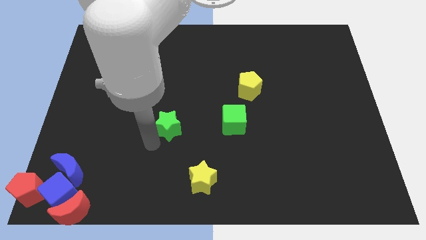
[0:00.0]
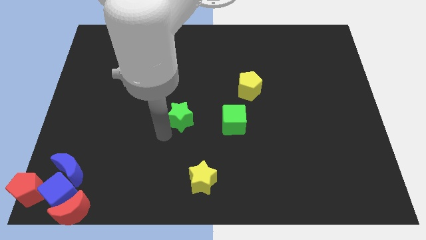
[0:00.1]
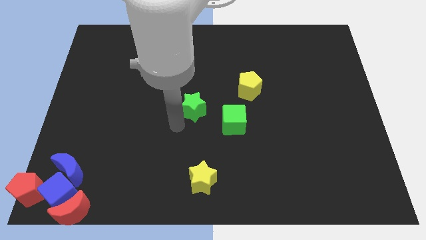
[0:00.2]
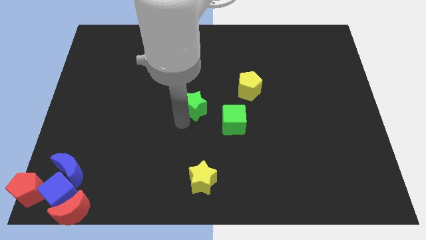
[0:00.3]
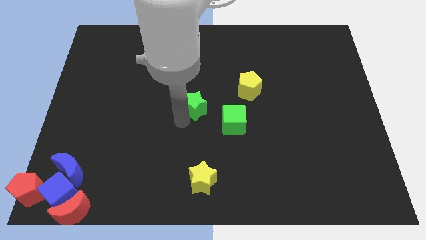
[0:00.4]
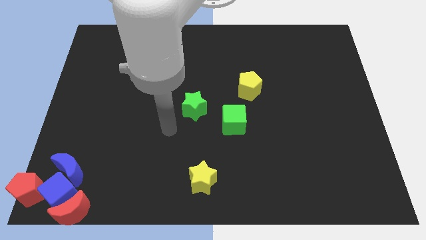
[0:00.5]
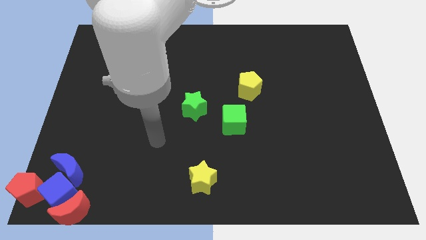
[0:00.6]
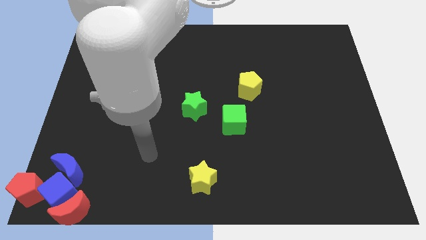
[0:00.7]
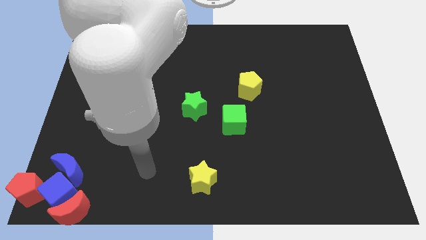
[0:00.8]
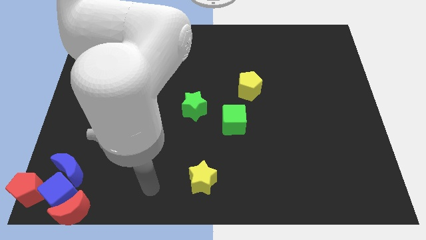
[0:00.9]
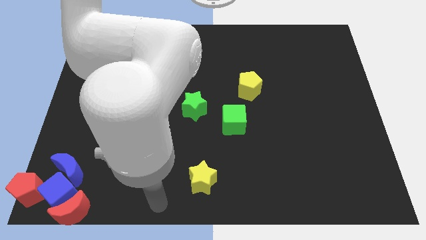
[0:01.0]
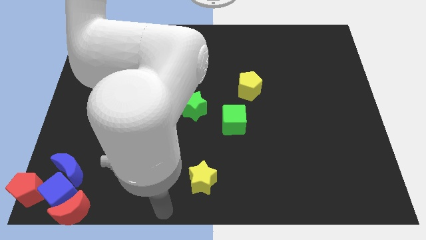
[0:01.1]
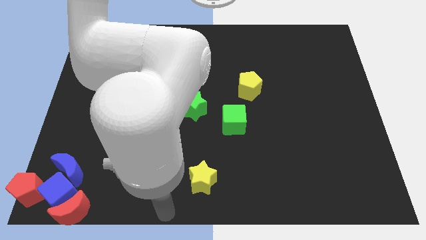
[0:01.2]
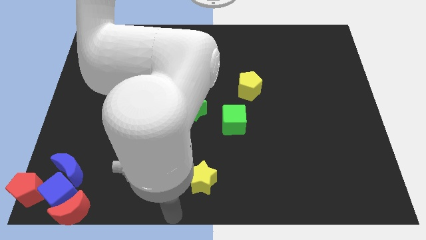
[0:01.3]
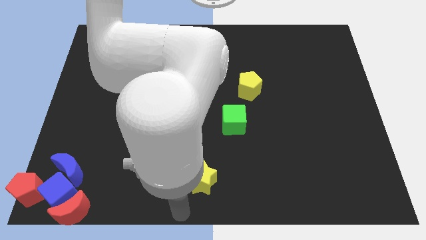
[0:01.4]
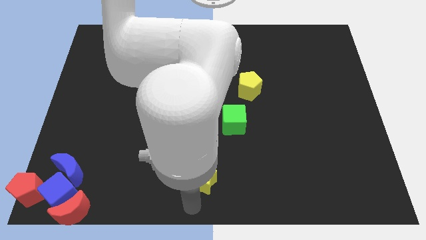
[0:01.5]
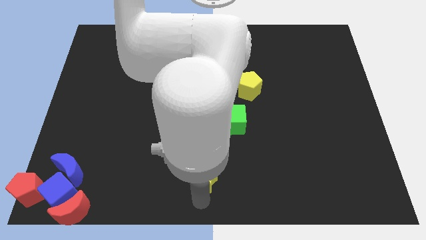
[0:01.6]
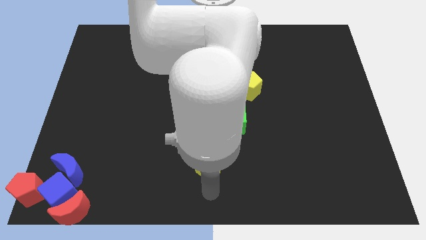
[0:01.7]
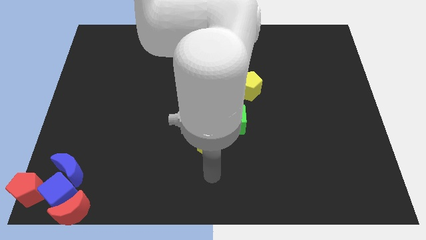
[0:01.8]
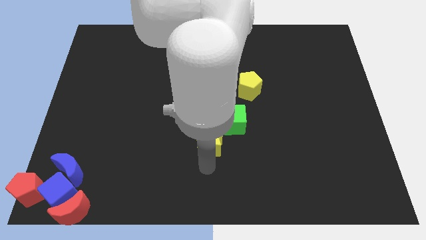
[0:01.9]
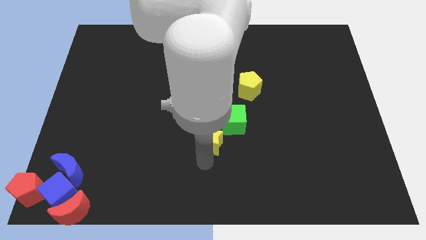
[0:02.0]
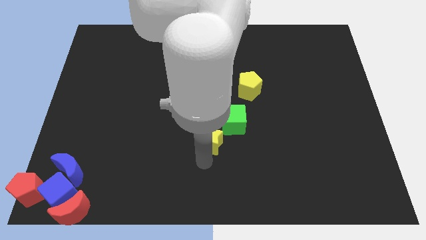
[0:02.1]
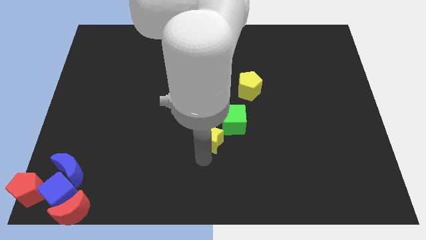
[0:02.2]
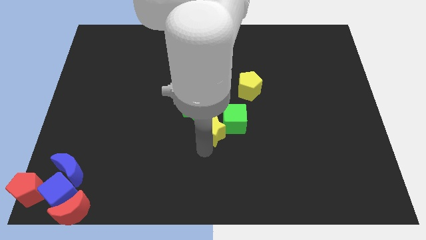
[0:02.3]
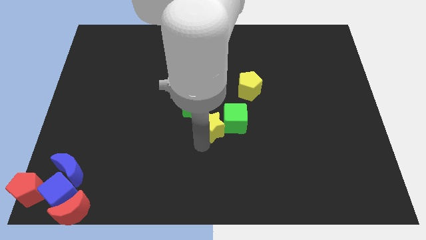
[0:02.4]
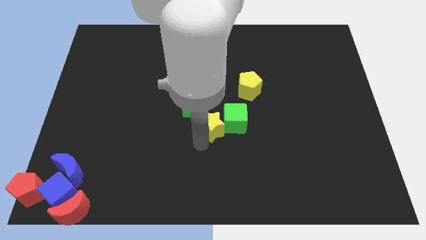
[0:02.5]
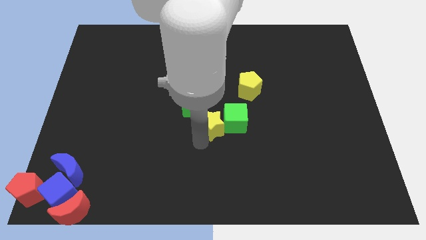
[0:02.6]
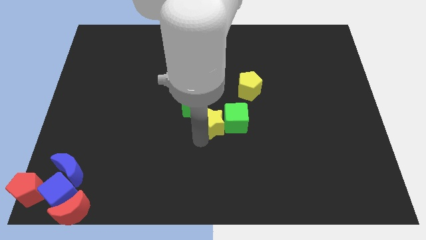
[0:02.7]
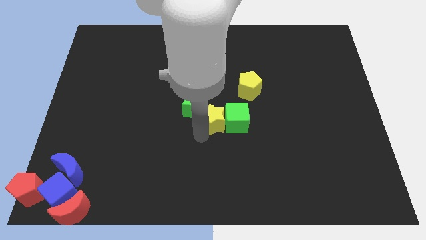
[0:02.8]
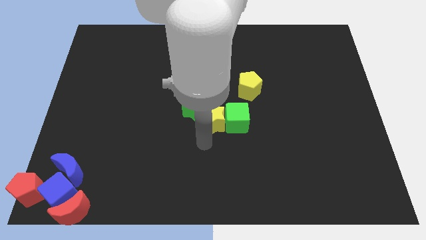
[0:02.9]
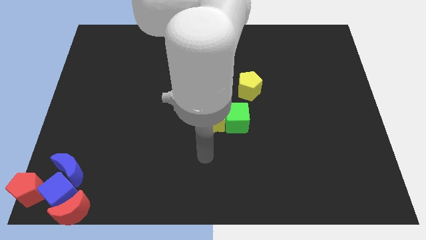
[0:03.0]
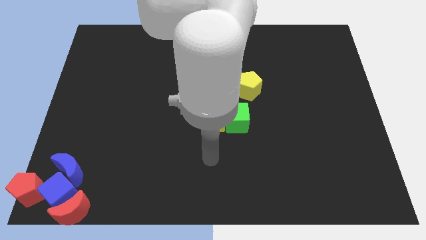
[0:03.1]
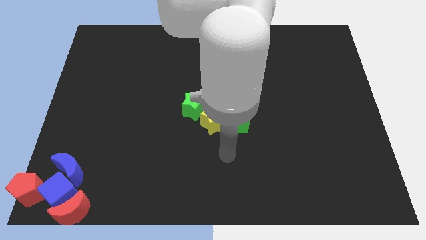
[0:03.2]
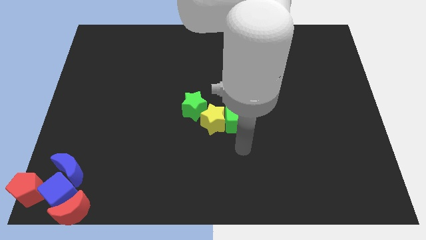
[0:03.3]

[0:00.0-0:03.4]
move the yellow star left to the green cube

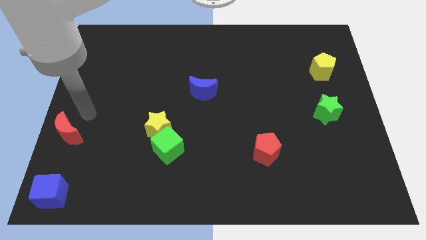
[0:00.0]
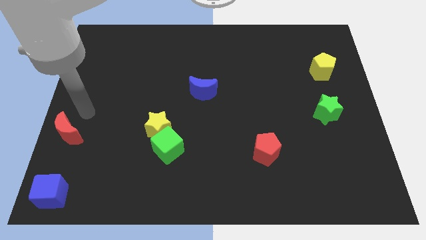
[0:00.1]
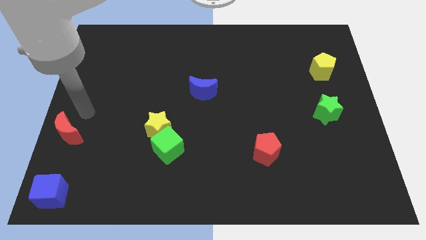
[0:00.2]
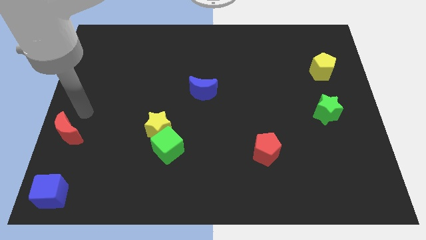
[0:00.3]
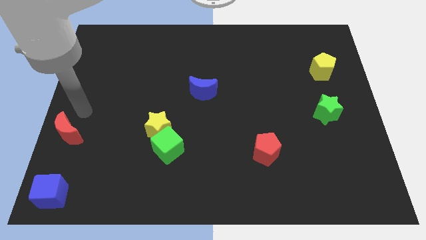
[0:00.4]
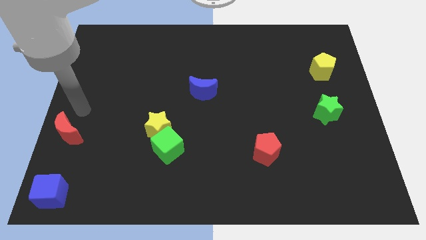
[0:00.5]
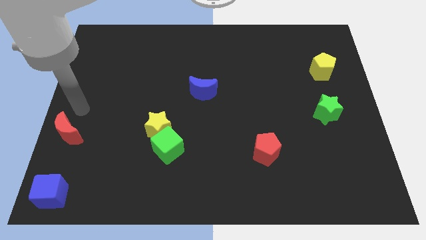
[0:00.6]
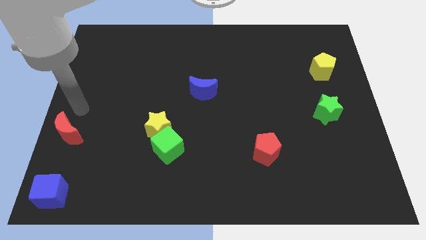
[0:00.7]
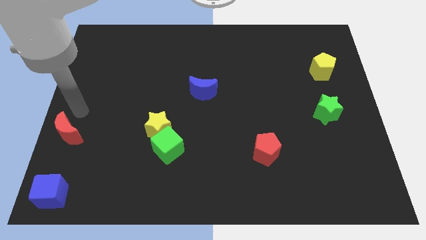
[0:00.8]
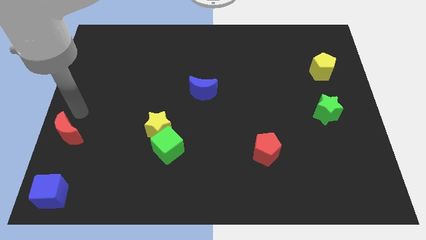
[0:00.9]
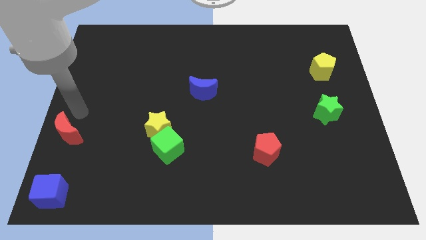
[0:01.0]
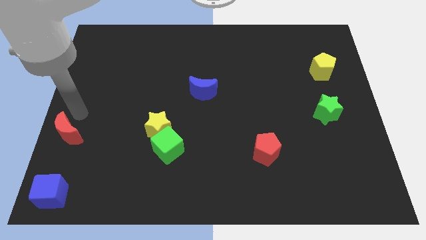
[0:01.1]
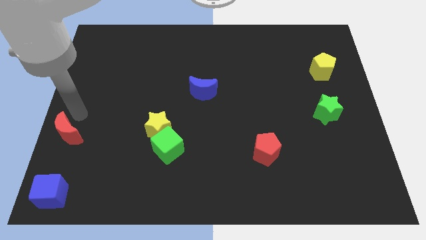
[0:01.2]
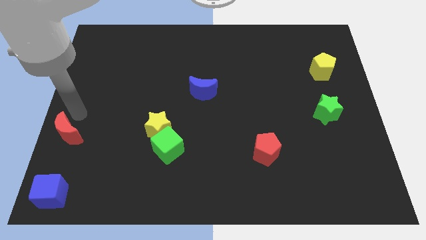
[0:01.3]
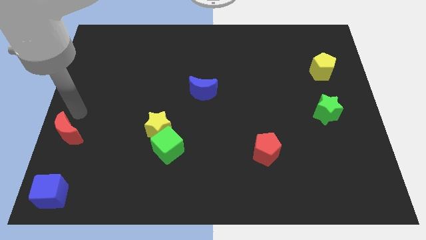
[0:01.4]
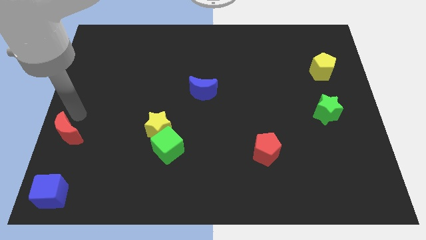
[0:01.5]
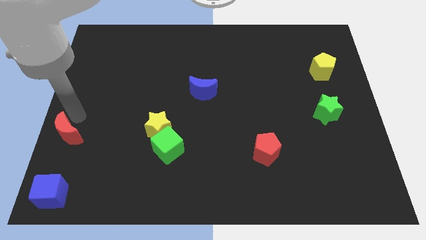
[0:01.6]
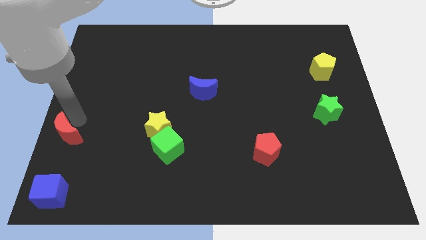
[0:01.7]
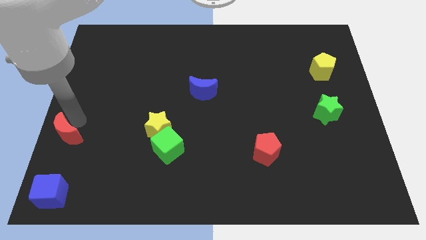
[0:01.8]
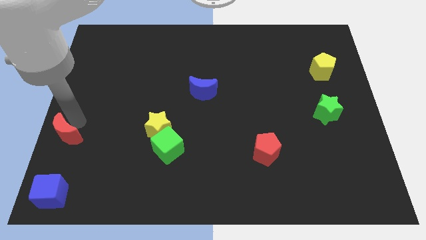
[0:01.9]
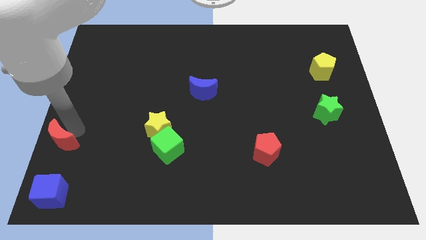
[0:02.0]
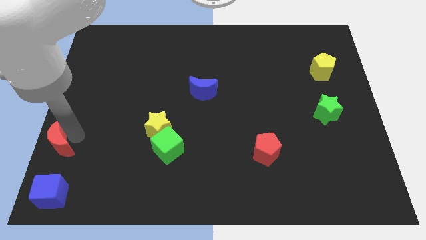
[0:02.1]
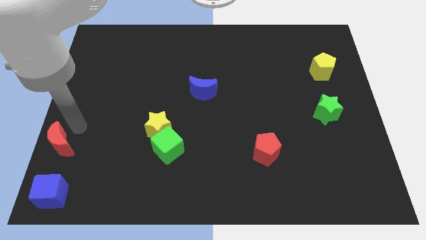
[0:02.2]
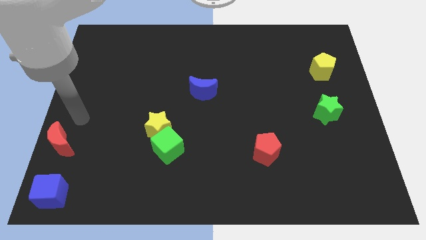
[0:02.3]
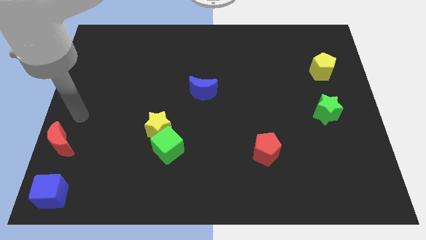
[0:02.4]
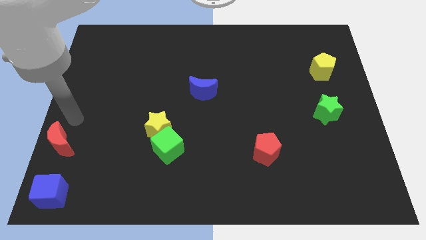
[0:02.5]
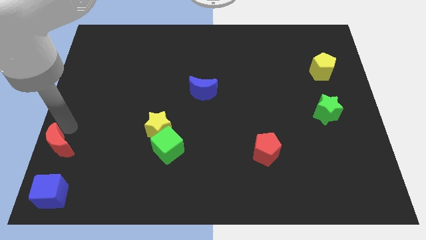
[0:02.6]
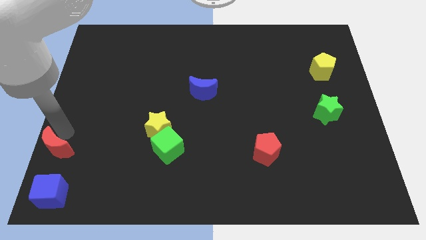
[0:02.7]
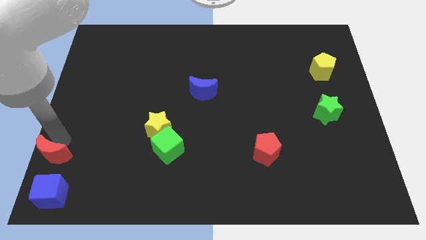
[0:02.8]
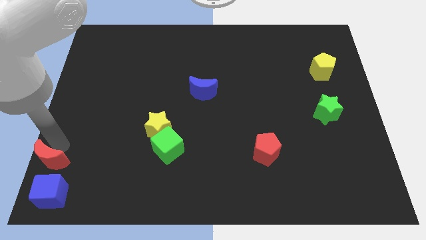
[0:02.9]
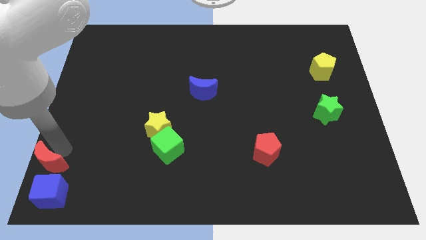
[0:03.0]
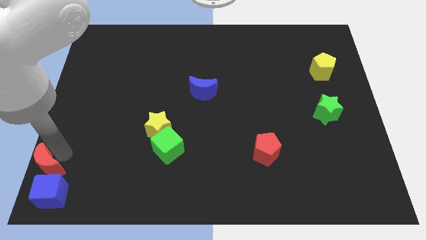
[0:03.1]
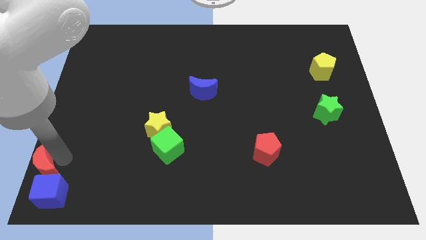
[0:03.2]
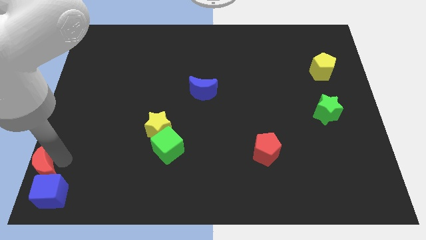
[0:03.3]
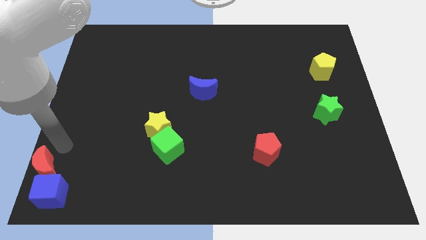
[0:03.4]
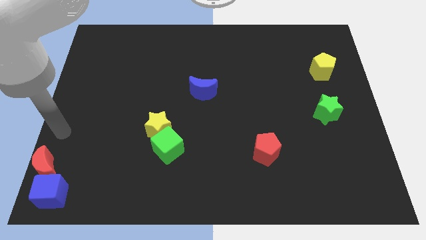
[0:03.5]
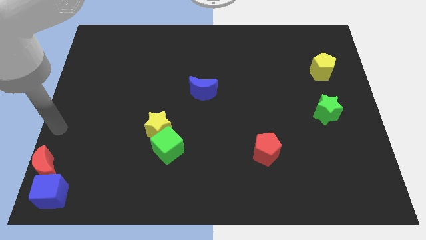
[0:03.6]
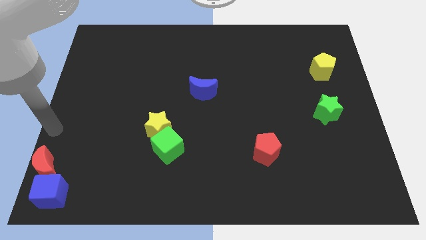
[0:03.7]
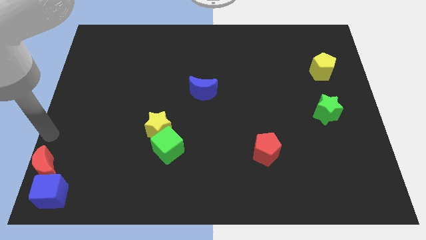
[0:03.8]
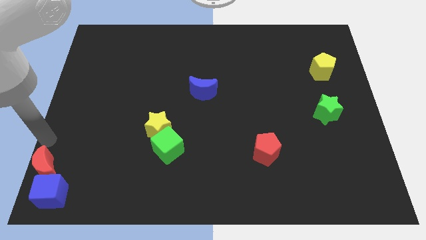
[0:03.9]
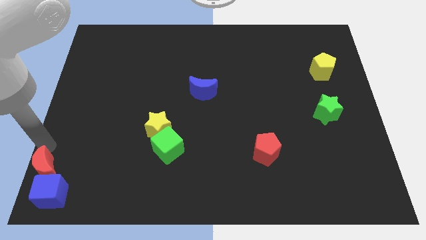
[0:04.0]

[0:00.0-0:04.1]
push the red moon into the blue cube

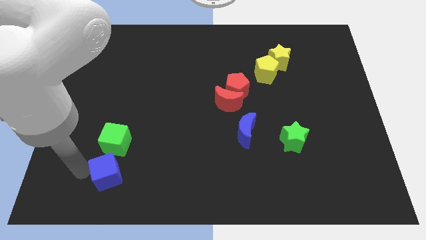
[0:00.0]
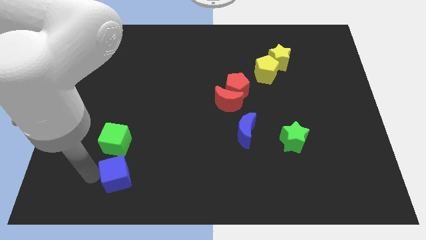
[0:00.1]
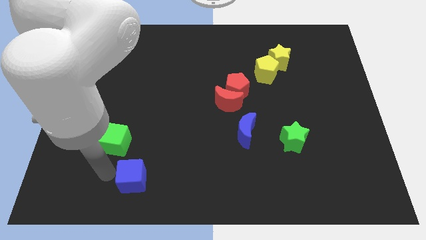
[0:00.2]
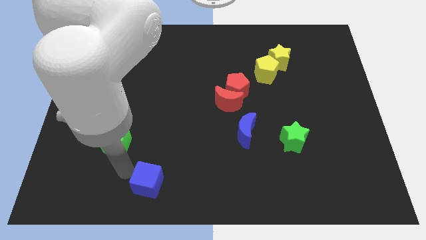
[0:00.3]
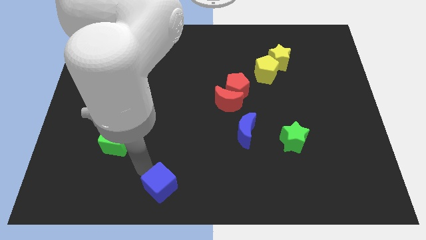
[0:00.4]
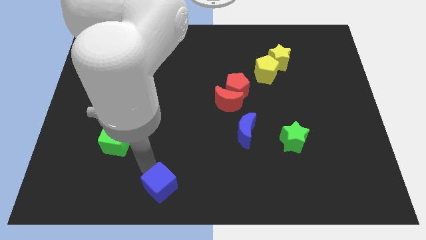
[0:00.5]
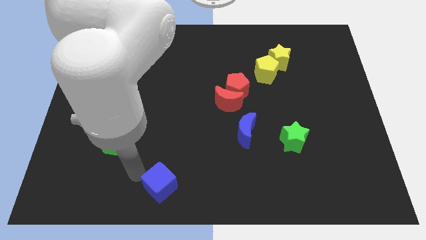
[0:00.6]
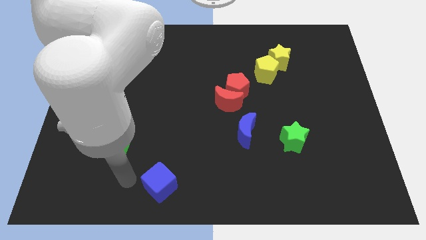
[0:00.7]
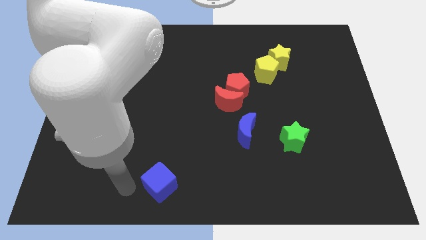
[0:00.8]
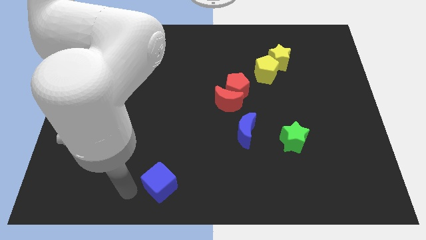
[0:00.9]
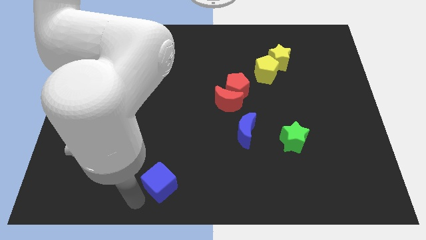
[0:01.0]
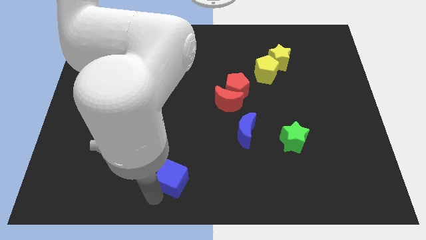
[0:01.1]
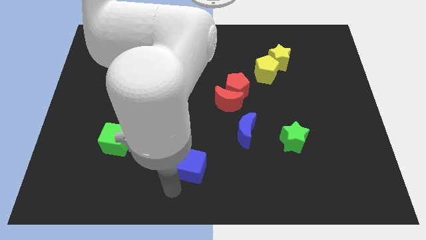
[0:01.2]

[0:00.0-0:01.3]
slide the blue cube diagonally bottom right to the green cube
